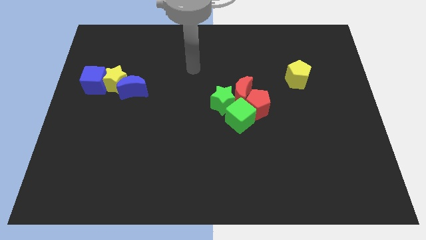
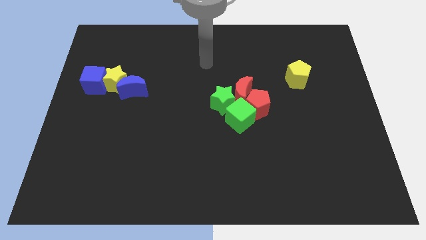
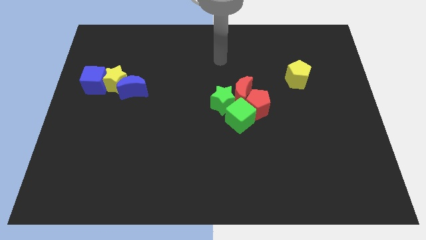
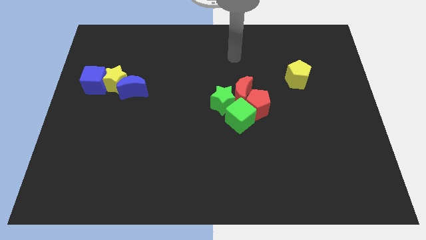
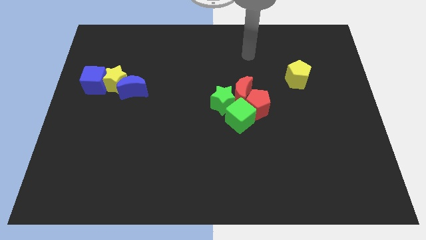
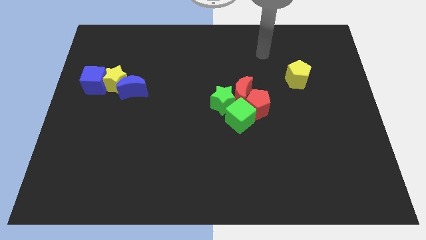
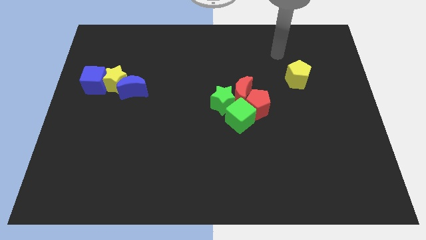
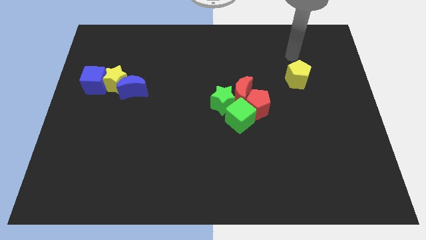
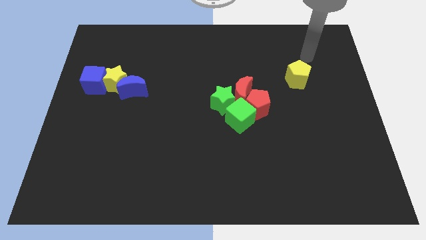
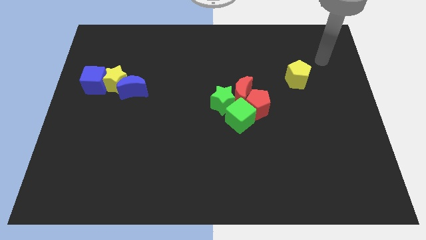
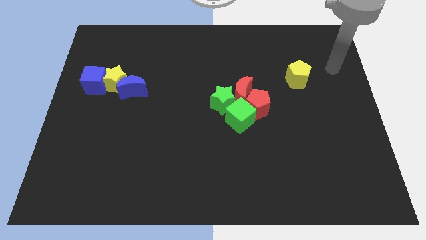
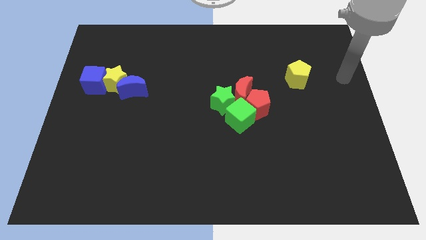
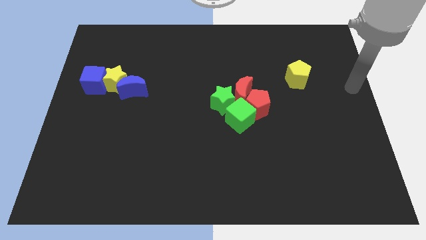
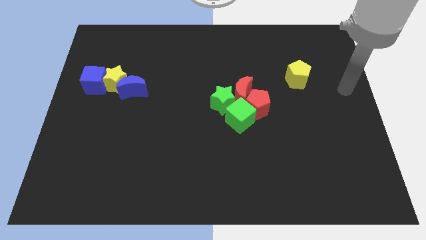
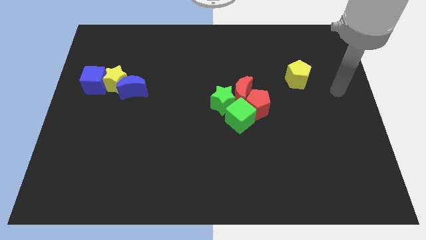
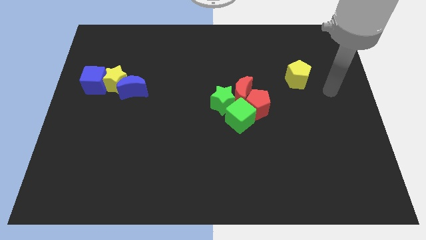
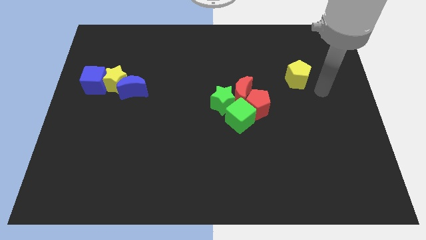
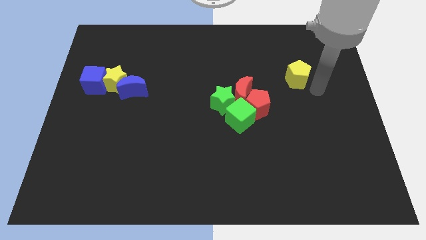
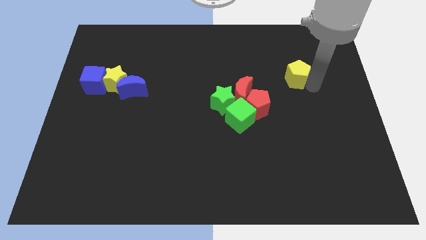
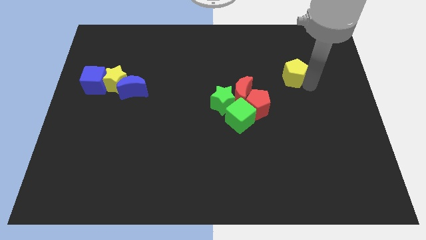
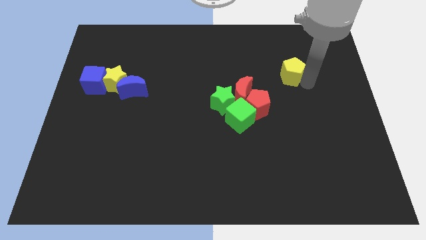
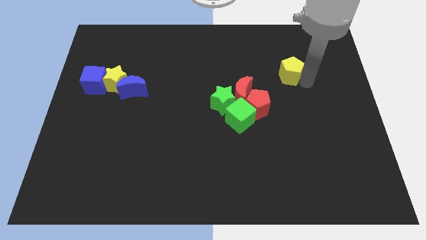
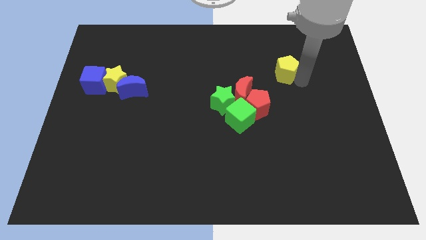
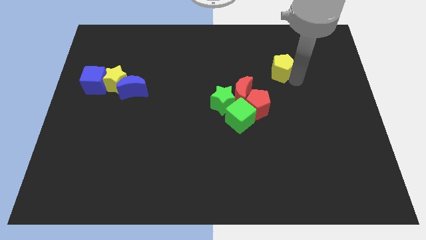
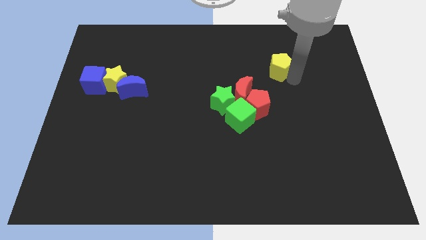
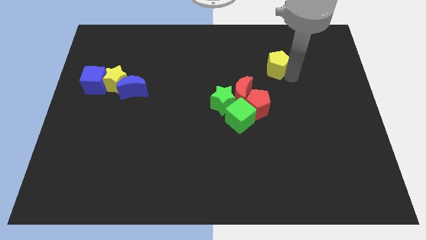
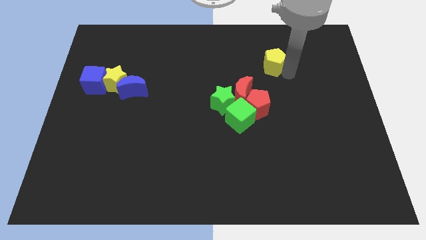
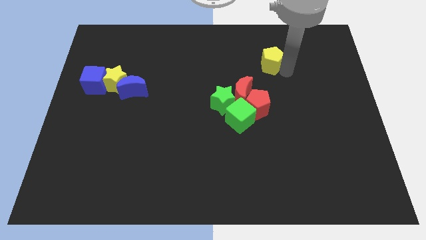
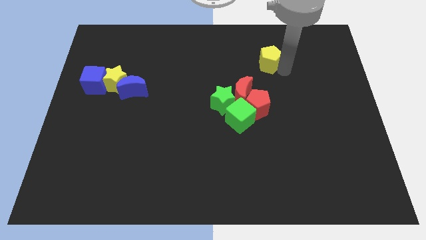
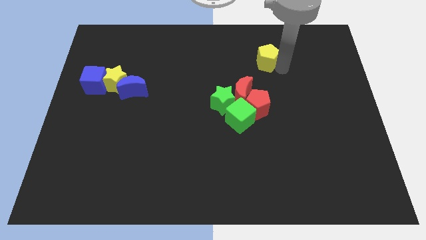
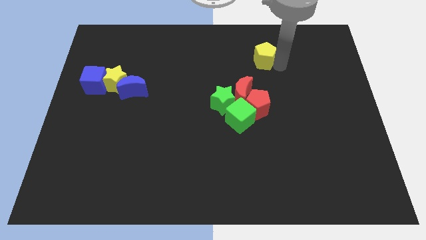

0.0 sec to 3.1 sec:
push pentagon towards top center

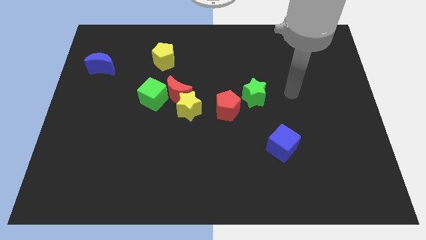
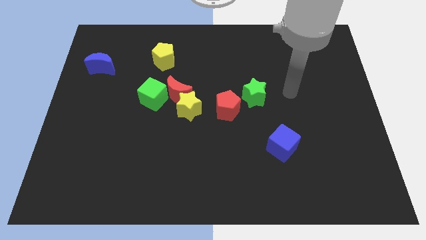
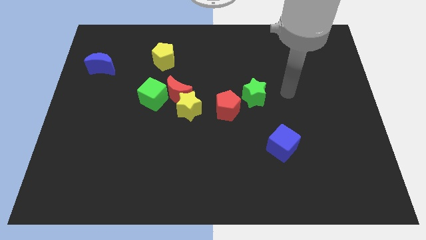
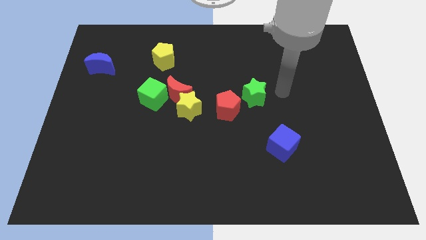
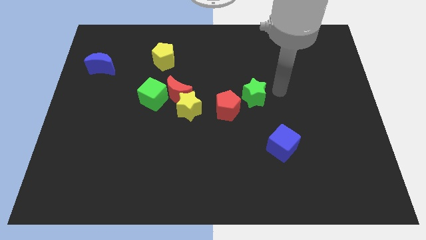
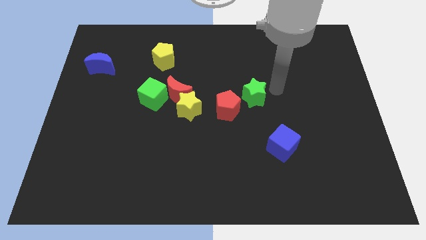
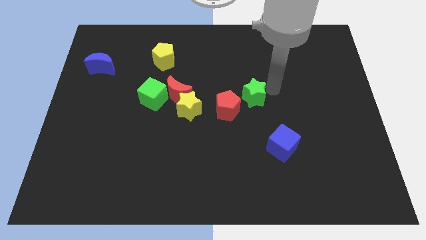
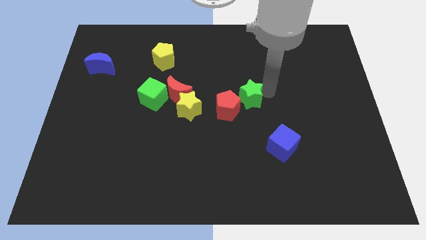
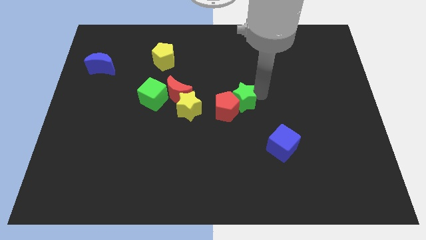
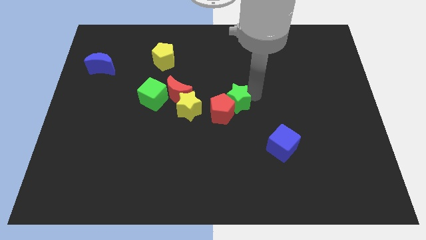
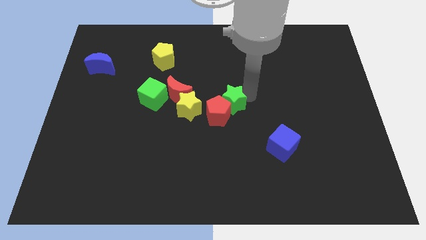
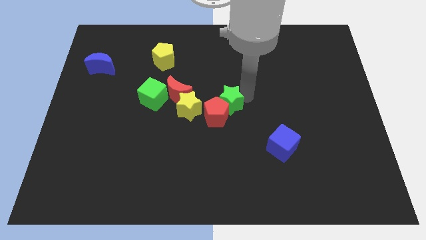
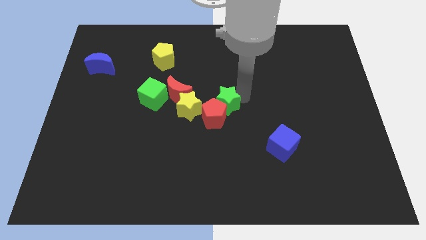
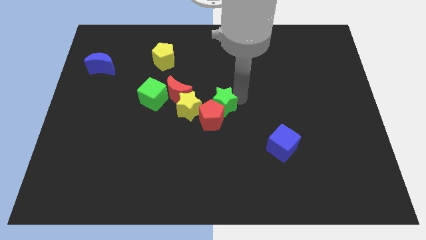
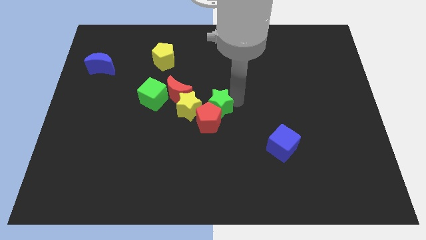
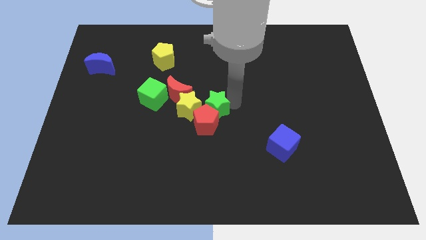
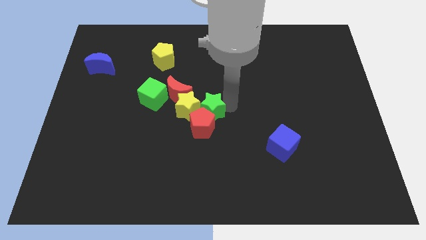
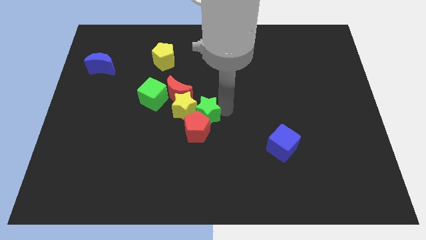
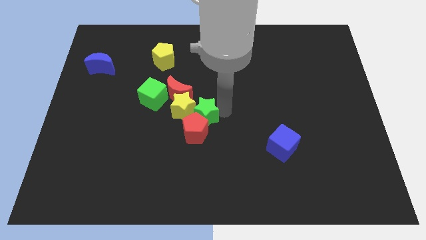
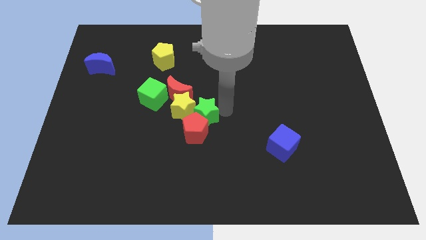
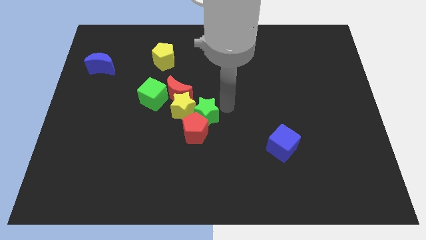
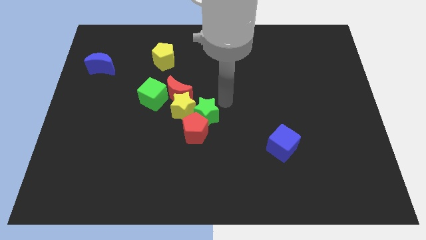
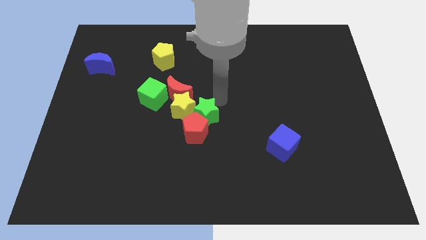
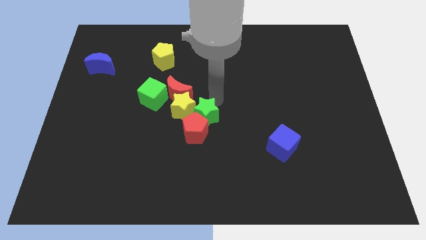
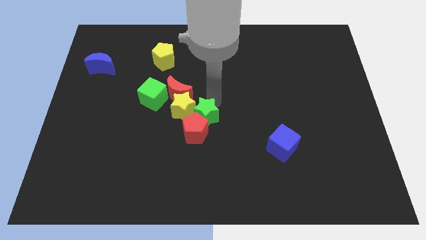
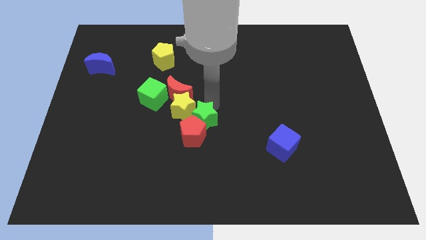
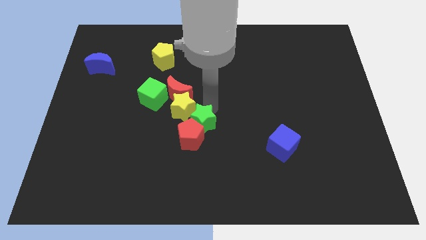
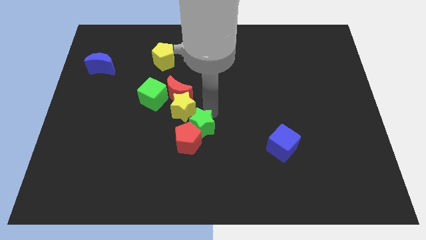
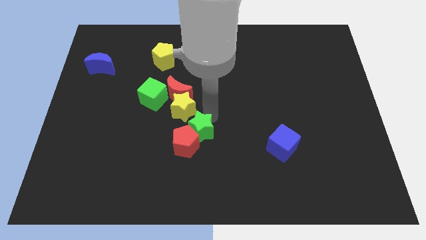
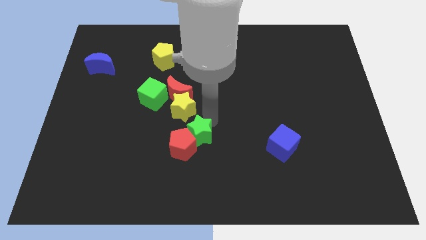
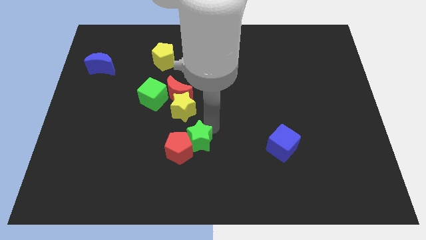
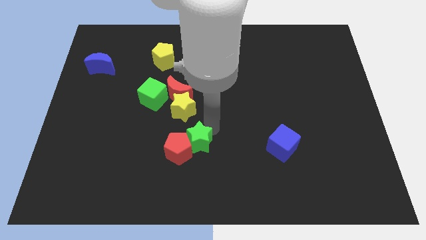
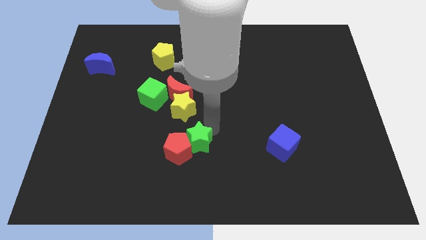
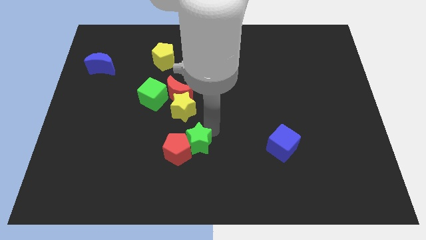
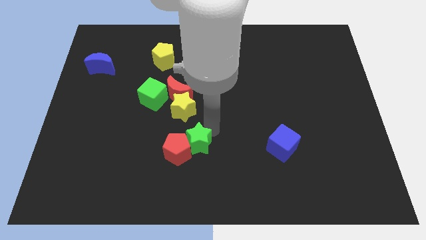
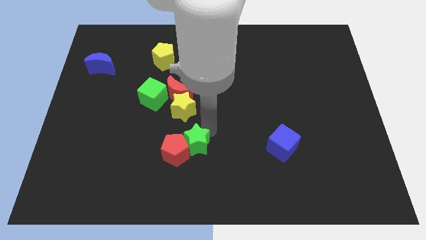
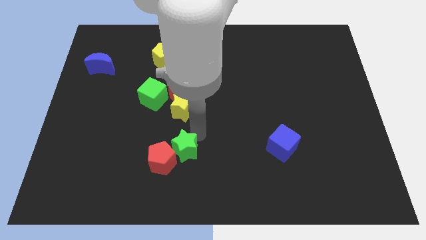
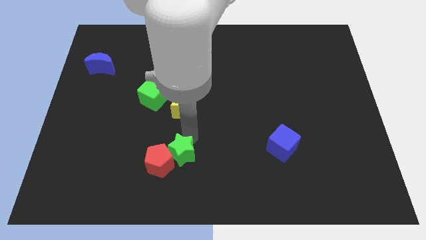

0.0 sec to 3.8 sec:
push the green star and red pentagon towards the bottom side of the board

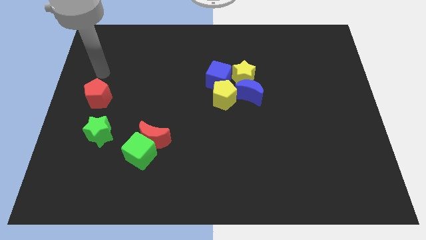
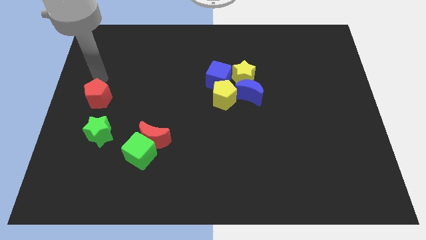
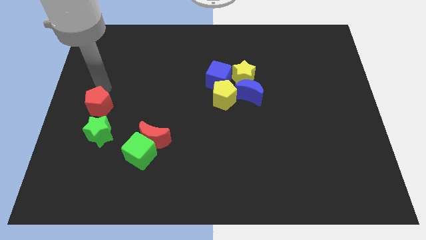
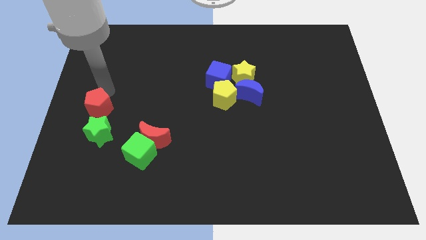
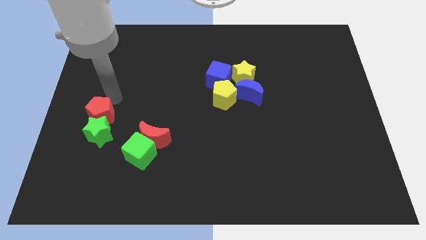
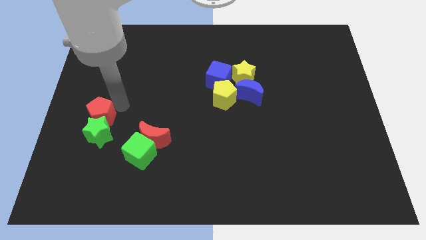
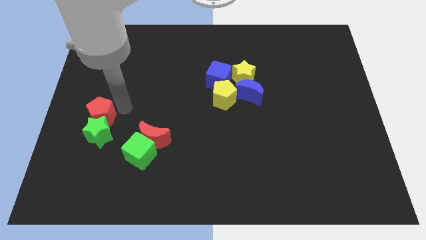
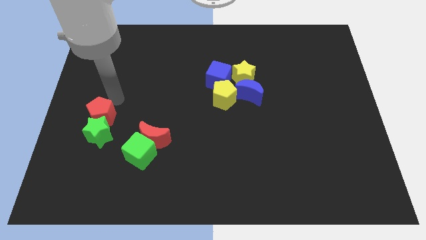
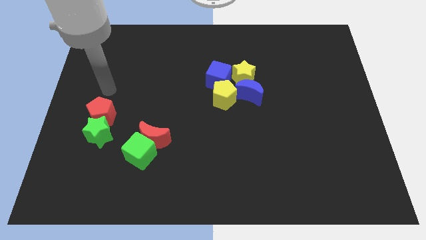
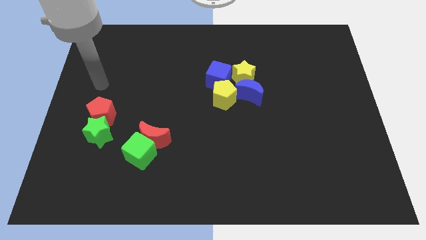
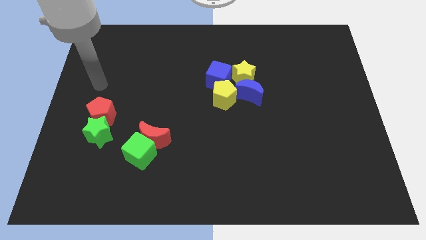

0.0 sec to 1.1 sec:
push the red pentagon into the green star

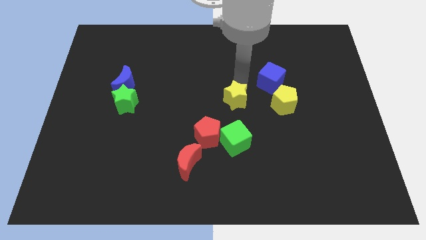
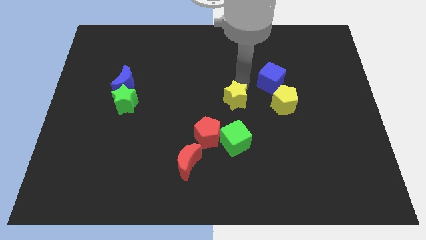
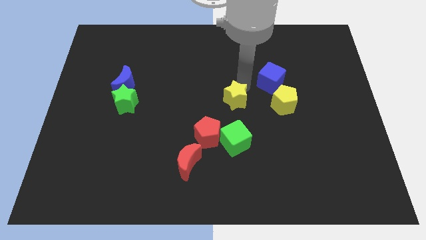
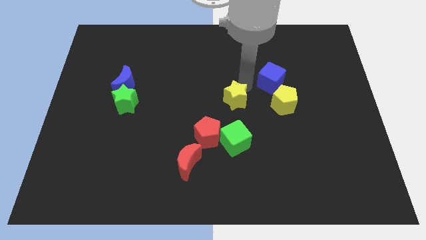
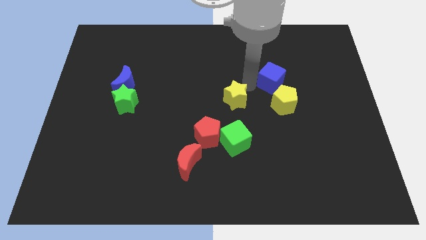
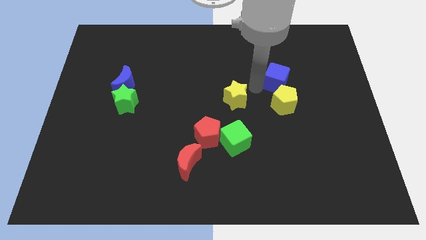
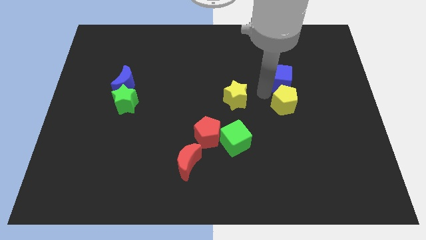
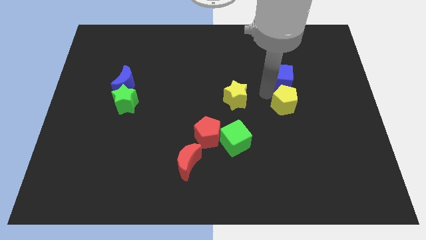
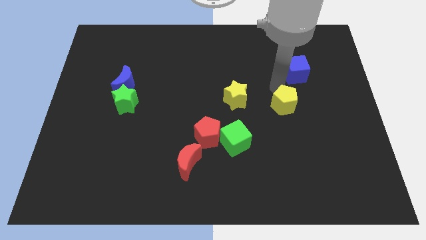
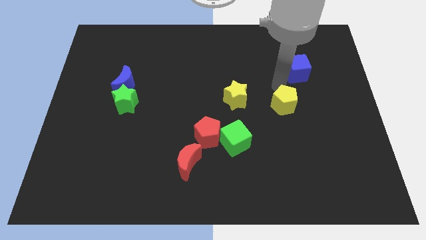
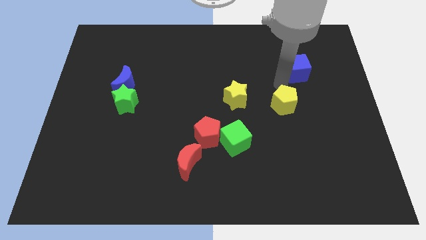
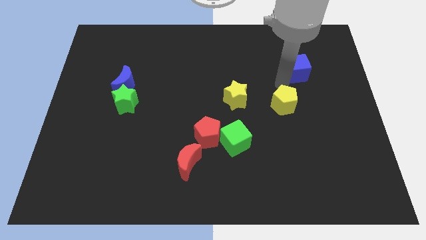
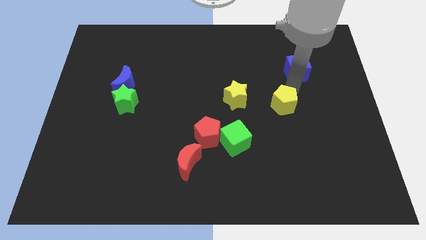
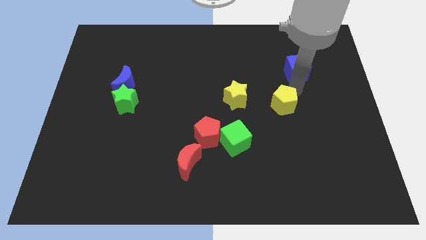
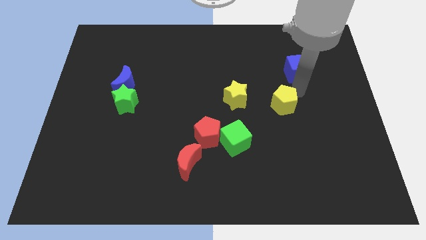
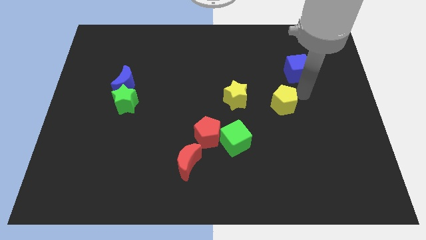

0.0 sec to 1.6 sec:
slightly move the blue cube towards the top right of the yellow pentagon
